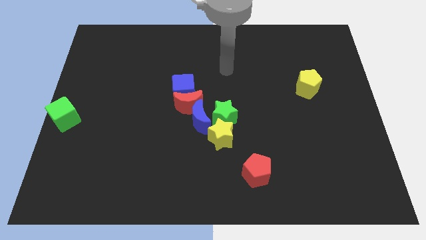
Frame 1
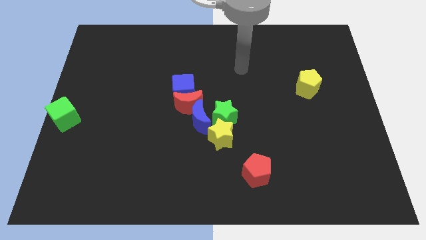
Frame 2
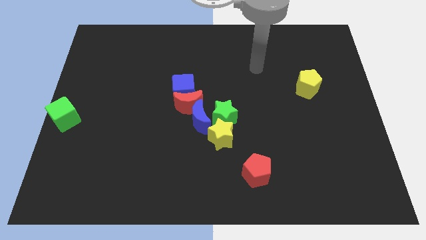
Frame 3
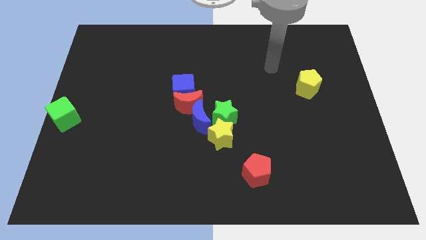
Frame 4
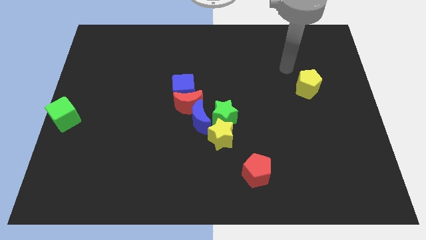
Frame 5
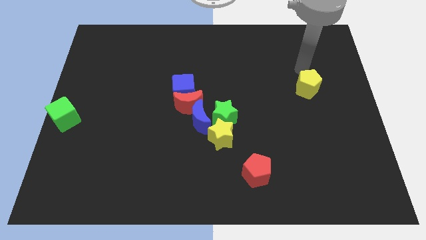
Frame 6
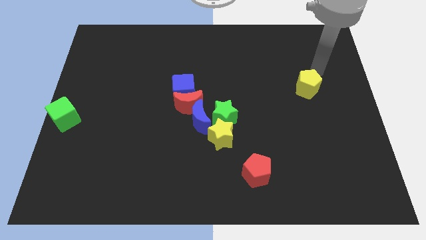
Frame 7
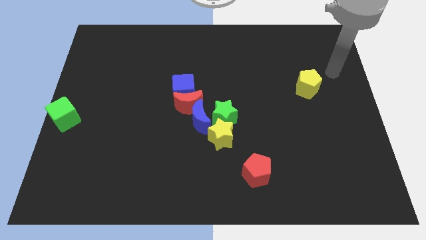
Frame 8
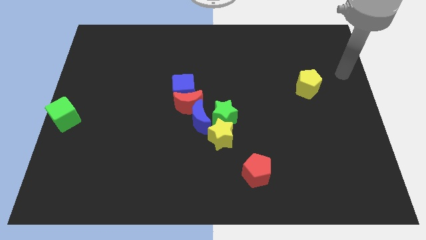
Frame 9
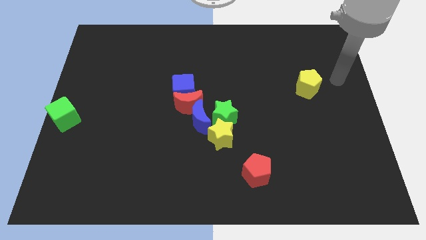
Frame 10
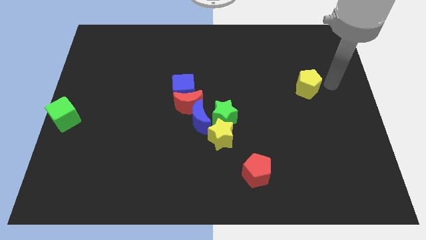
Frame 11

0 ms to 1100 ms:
point your arm at the right side of the yellow pentagon

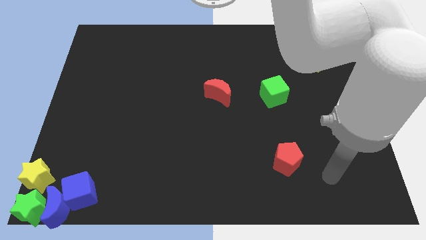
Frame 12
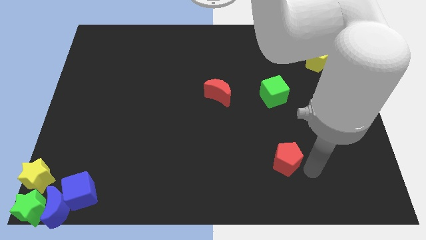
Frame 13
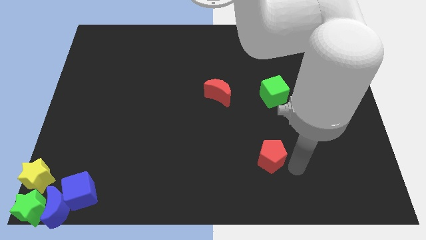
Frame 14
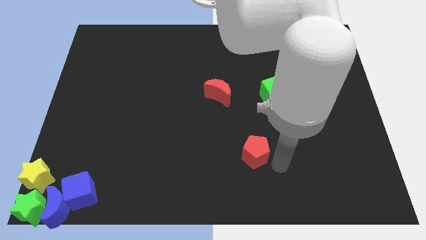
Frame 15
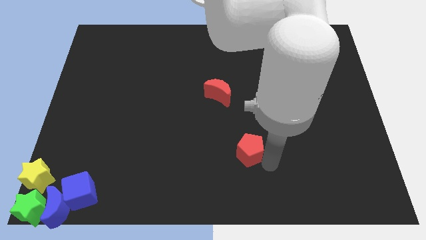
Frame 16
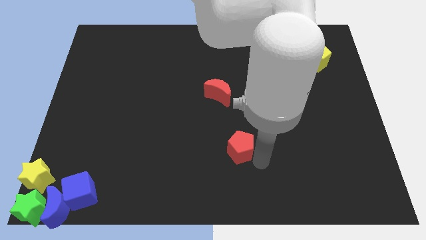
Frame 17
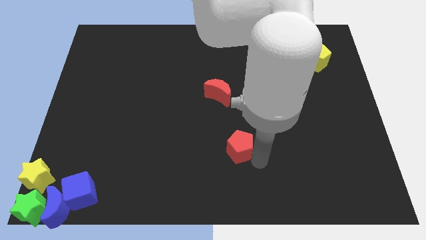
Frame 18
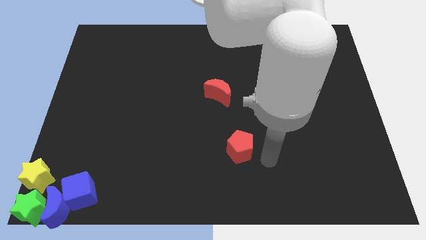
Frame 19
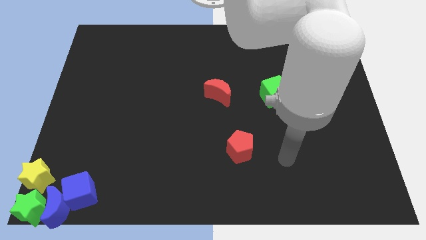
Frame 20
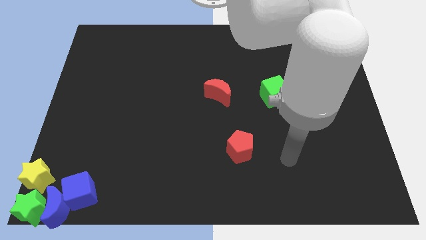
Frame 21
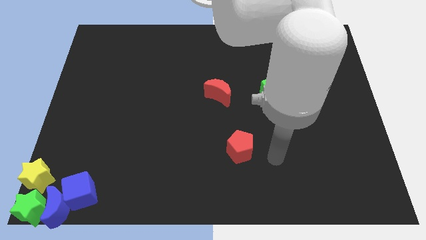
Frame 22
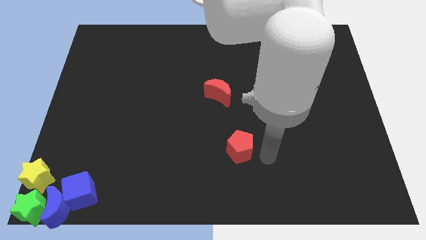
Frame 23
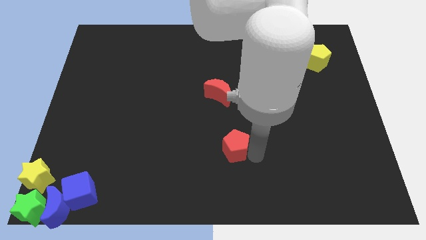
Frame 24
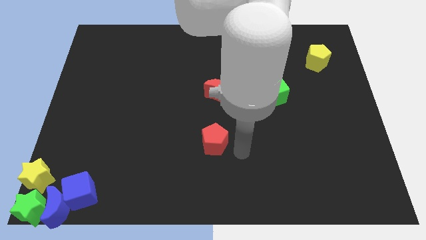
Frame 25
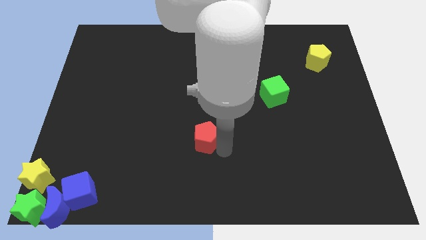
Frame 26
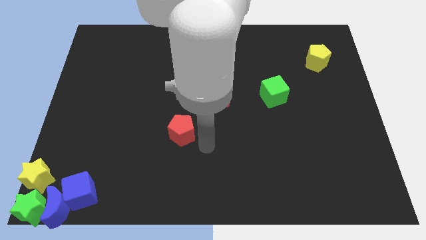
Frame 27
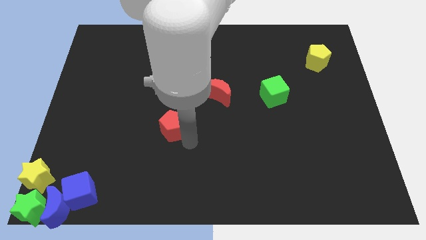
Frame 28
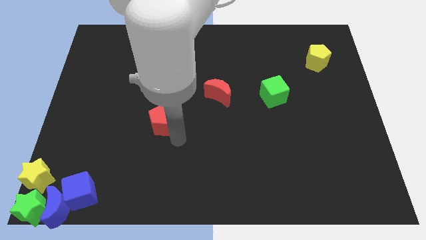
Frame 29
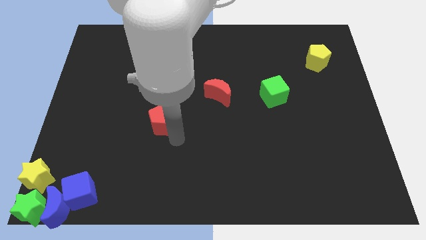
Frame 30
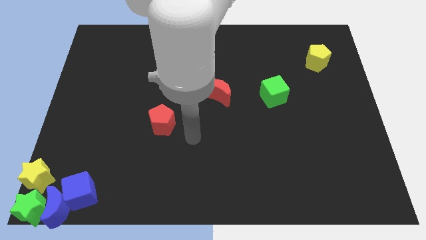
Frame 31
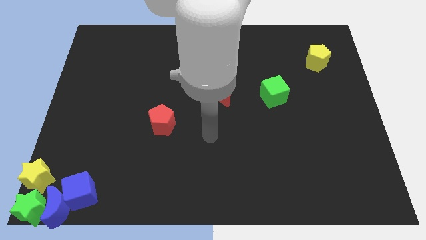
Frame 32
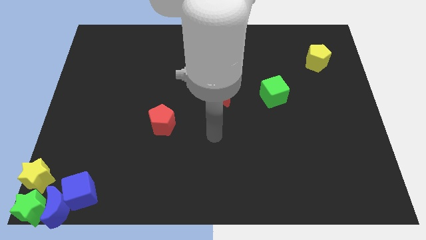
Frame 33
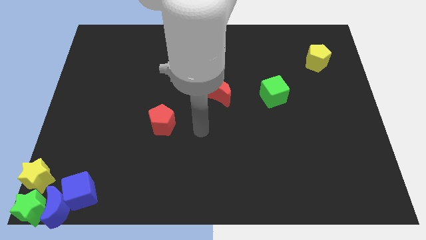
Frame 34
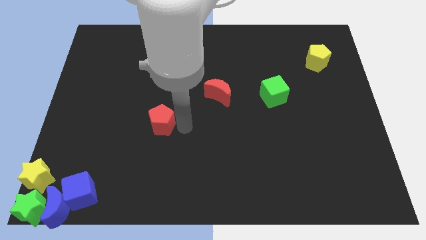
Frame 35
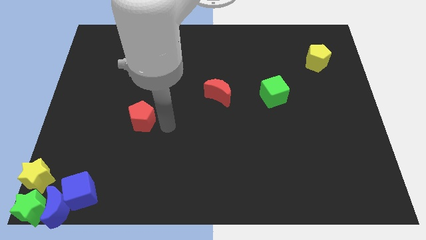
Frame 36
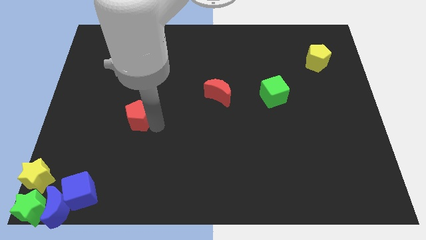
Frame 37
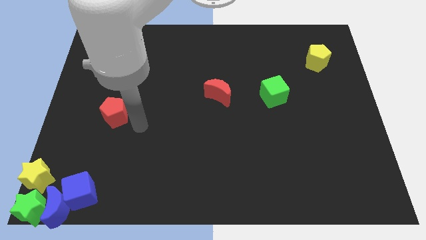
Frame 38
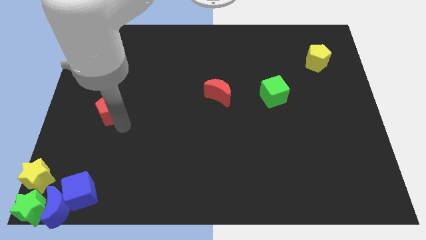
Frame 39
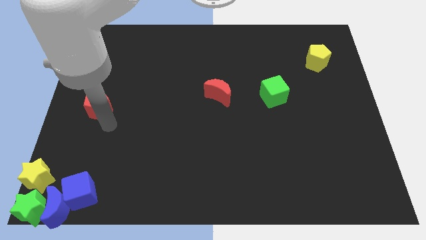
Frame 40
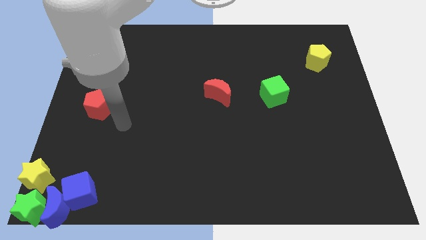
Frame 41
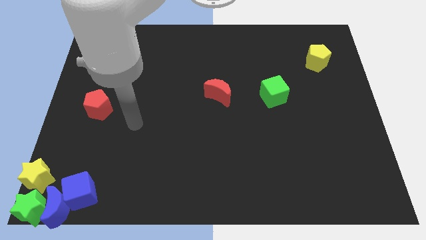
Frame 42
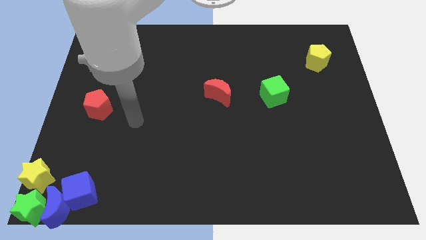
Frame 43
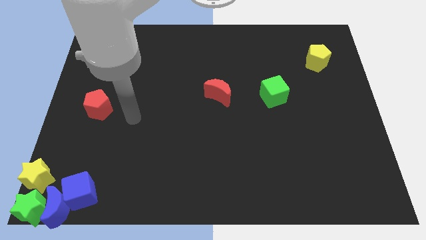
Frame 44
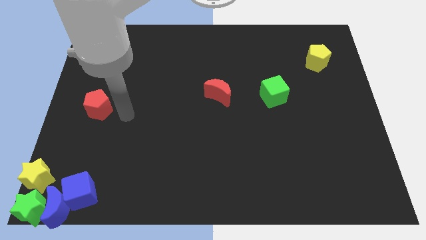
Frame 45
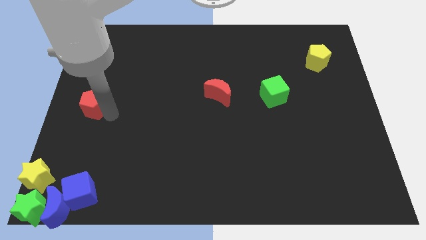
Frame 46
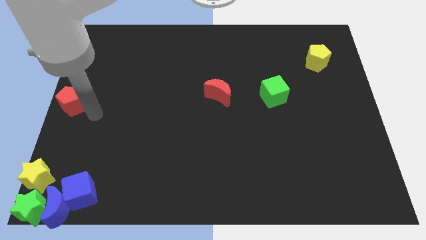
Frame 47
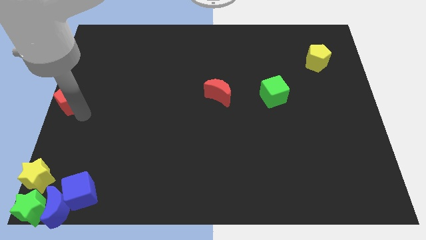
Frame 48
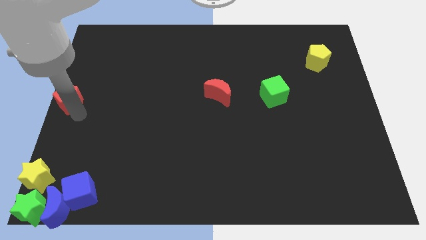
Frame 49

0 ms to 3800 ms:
slide the red pentagon to the center left of the table

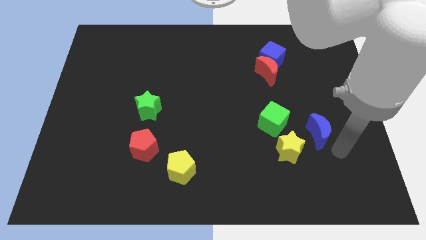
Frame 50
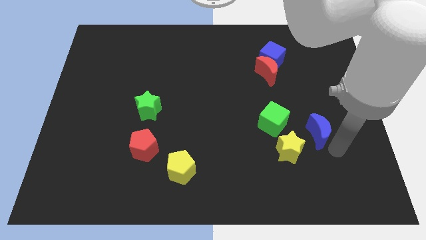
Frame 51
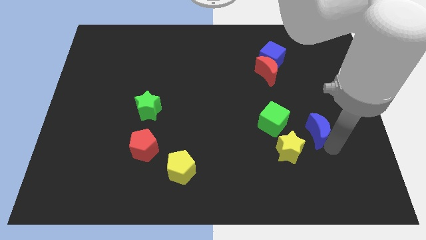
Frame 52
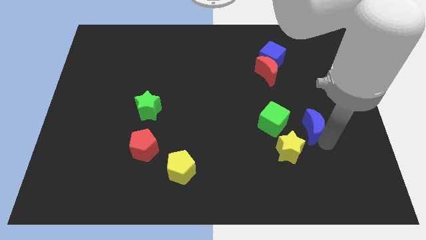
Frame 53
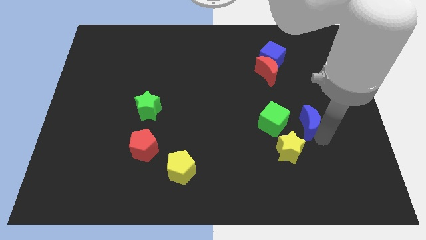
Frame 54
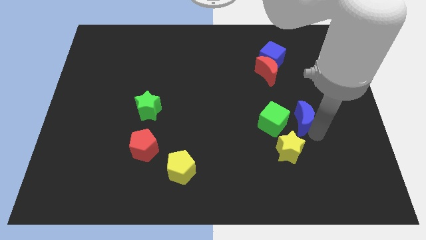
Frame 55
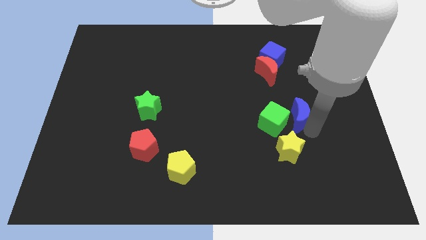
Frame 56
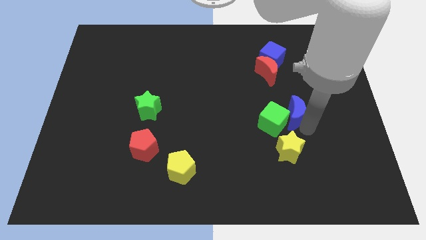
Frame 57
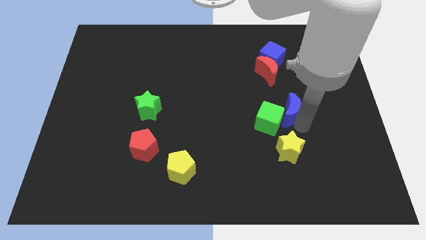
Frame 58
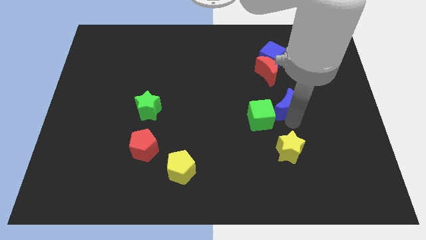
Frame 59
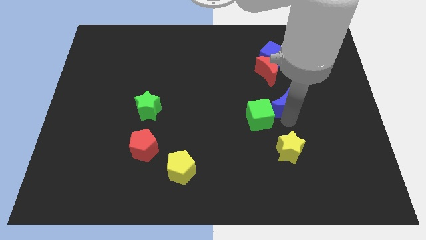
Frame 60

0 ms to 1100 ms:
push the blue crescent to the right of the green cube

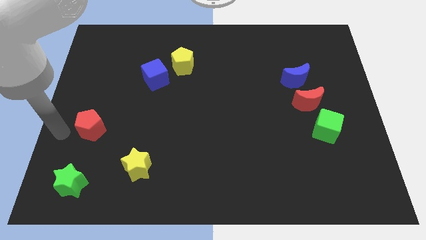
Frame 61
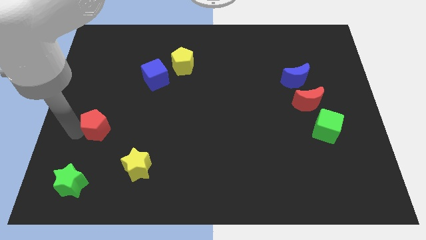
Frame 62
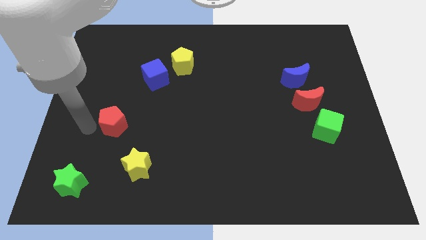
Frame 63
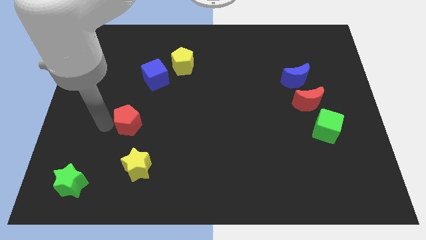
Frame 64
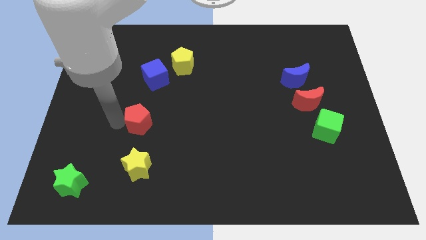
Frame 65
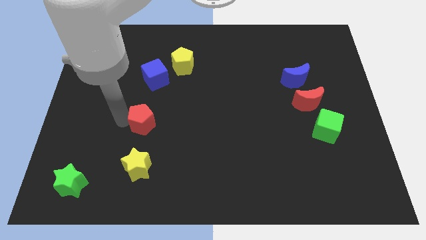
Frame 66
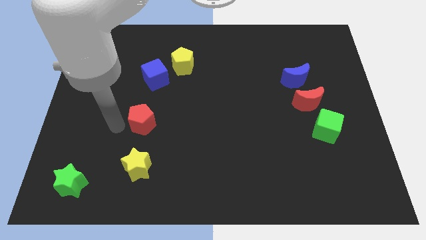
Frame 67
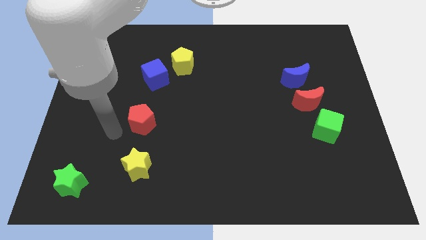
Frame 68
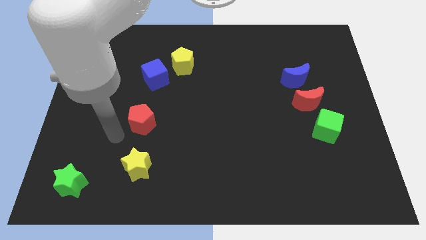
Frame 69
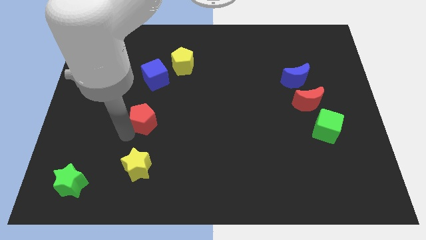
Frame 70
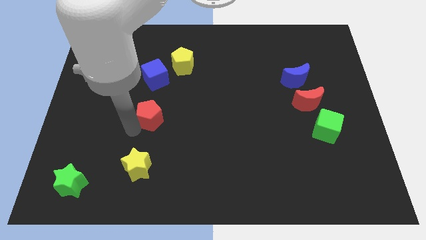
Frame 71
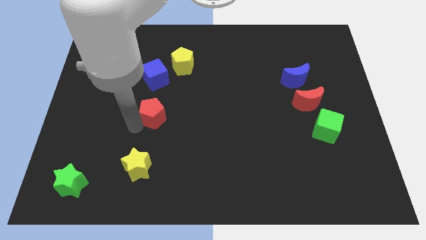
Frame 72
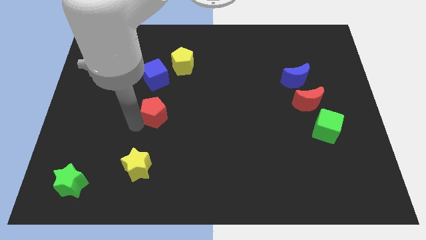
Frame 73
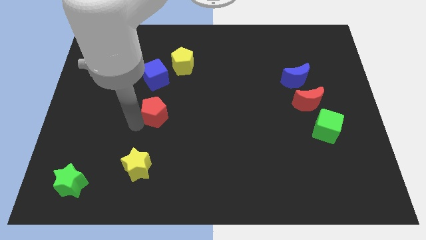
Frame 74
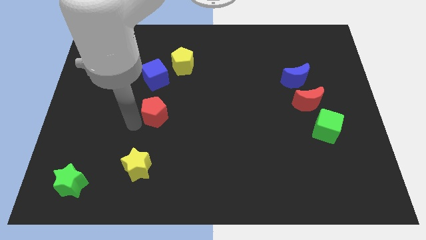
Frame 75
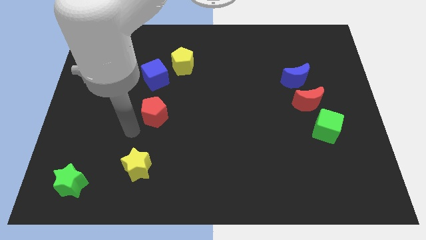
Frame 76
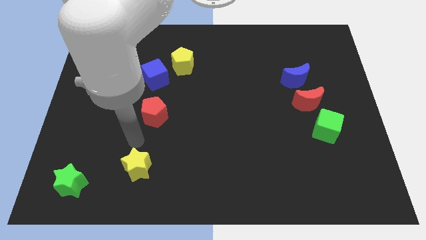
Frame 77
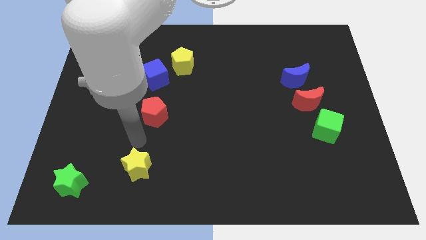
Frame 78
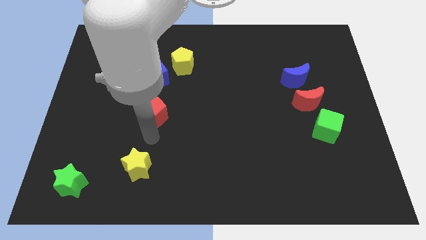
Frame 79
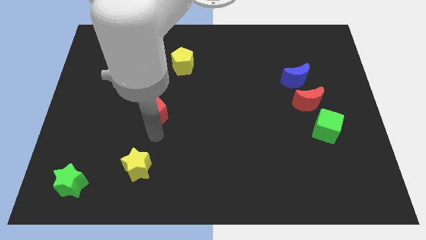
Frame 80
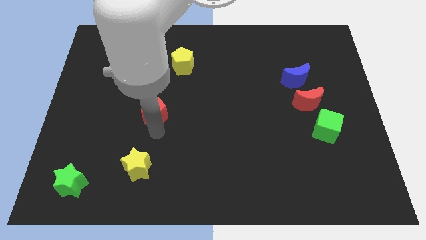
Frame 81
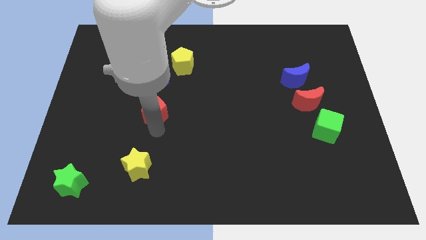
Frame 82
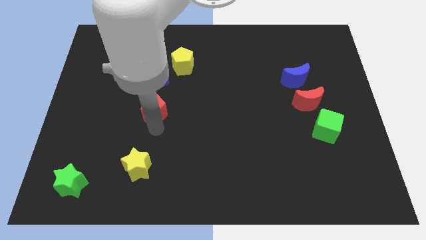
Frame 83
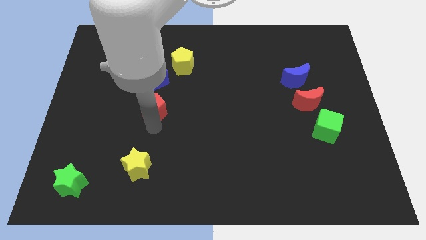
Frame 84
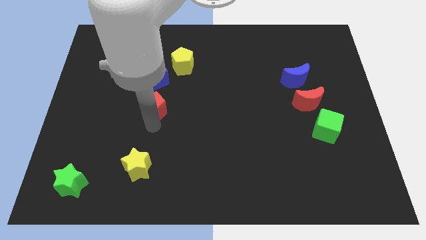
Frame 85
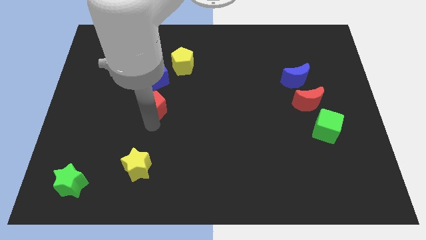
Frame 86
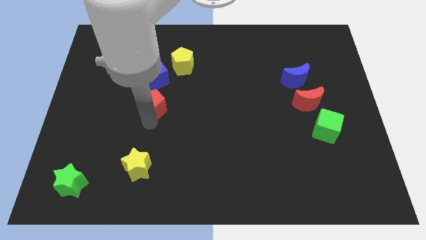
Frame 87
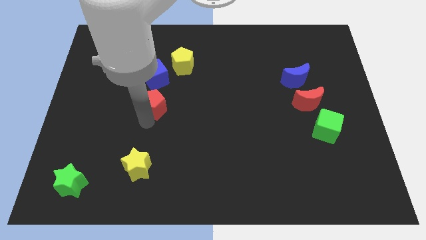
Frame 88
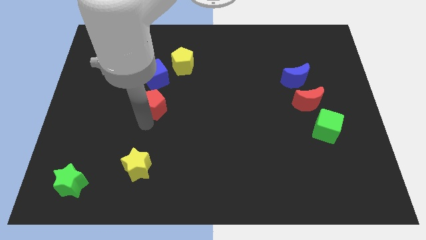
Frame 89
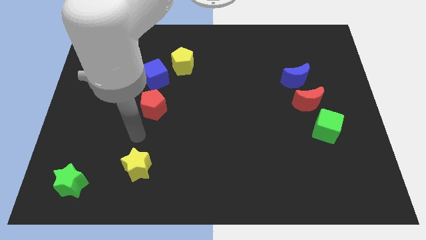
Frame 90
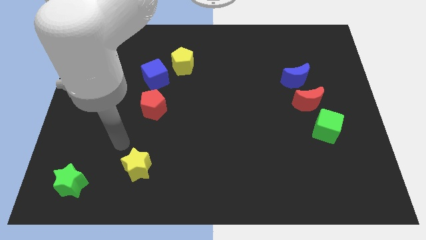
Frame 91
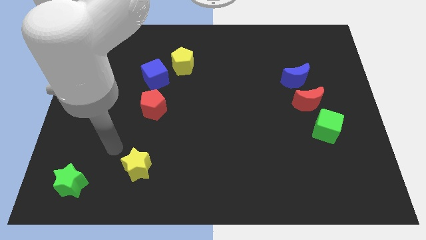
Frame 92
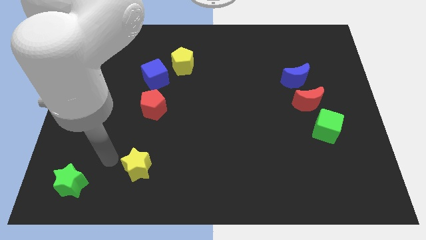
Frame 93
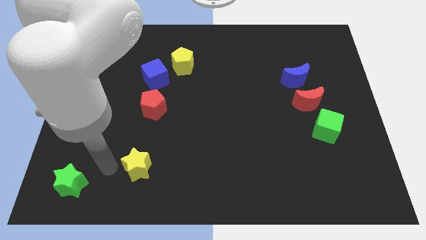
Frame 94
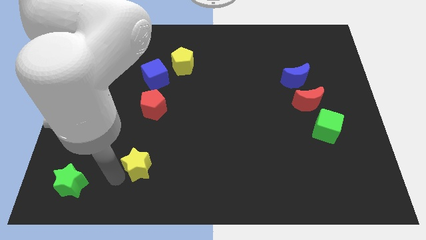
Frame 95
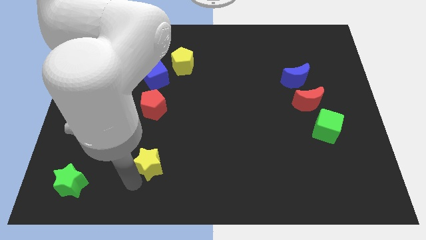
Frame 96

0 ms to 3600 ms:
put the red crescent below the blue cube
